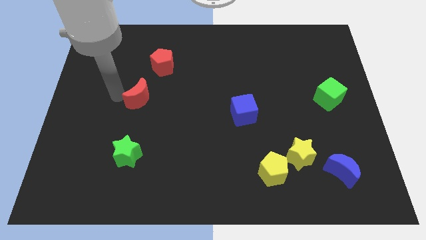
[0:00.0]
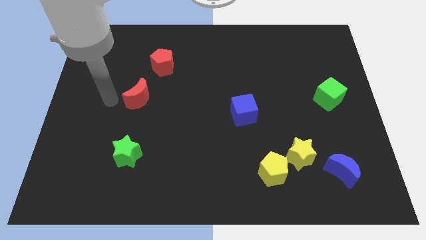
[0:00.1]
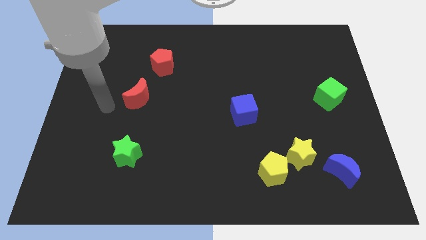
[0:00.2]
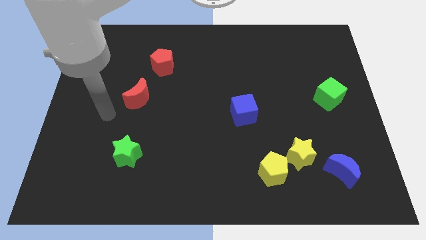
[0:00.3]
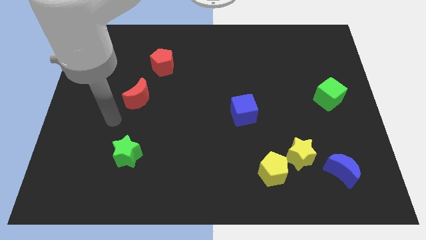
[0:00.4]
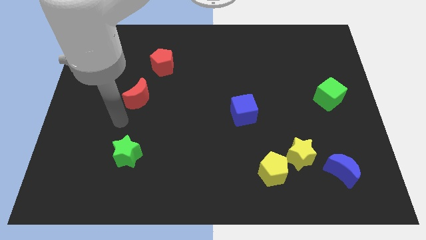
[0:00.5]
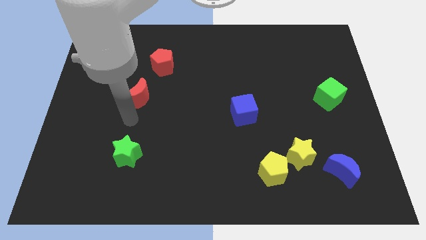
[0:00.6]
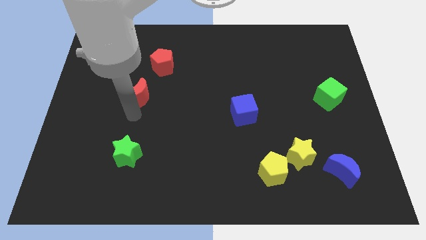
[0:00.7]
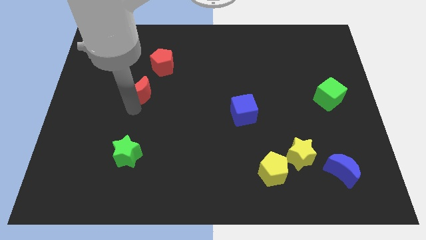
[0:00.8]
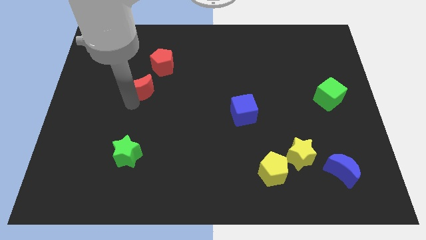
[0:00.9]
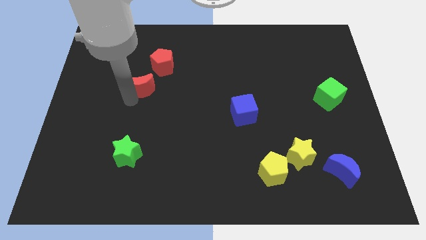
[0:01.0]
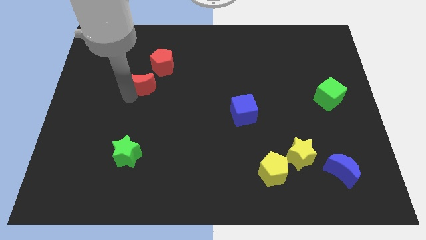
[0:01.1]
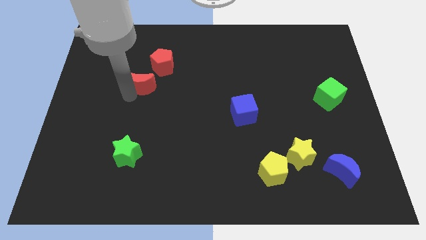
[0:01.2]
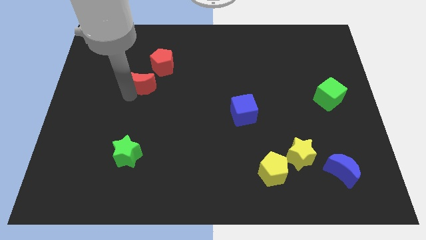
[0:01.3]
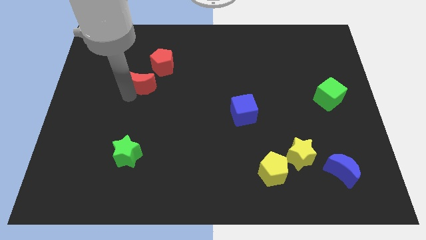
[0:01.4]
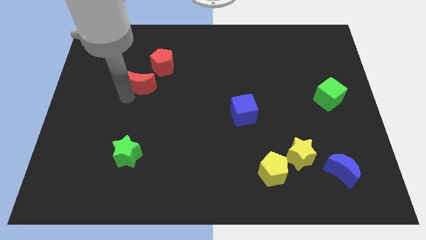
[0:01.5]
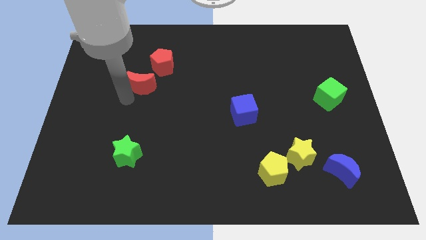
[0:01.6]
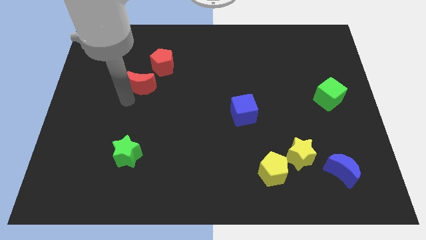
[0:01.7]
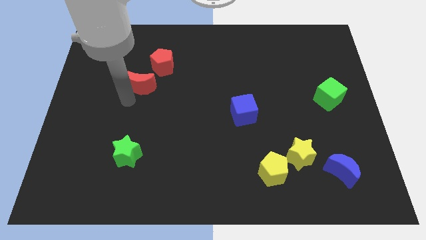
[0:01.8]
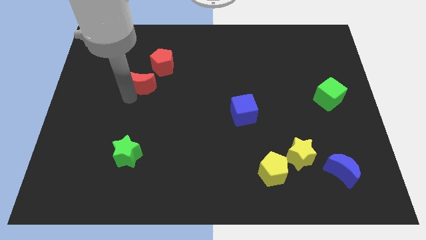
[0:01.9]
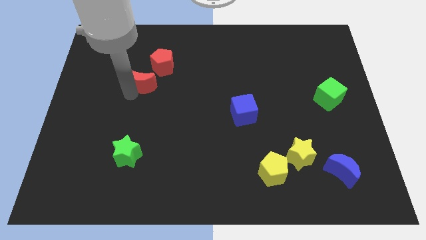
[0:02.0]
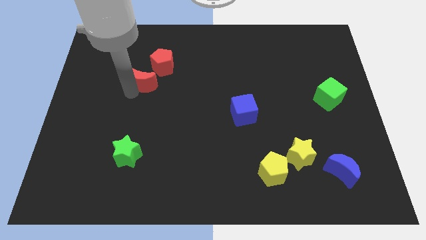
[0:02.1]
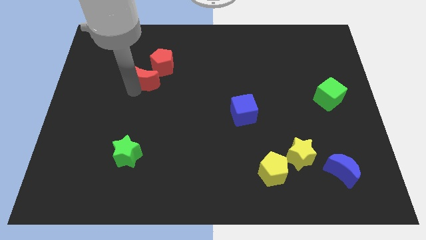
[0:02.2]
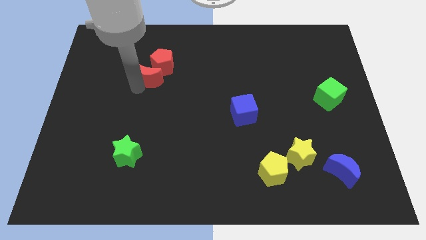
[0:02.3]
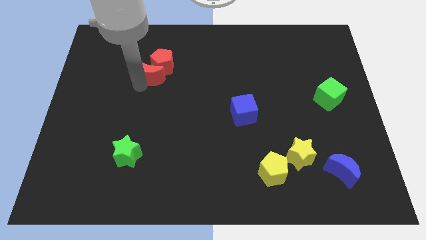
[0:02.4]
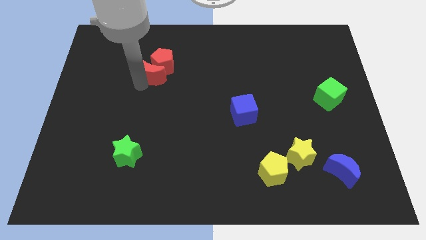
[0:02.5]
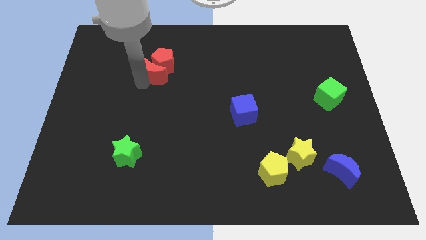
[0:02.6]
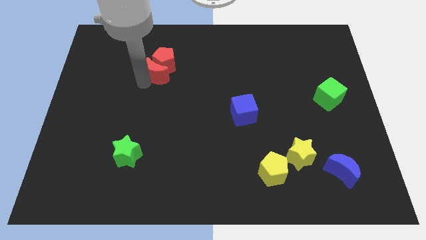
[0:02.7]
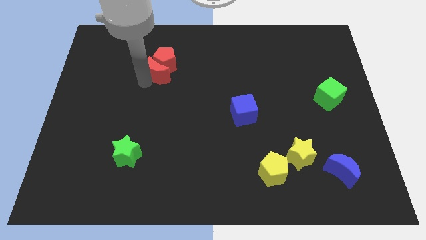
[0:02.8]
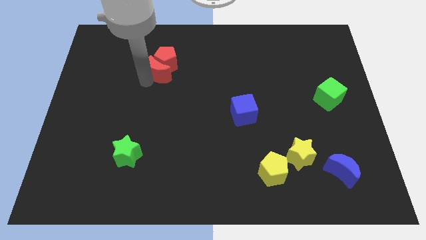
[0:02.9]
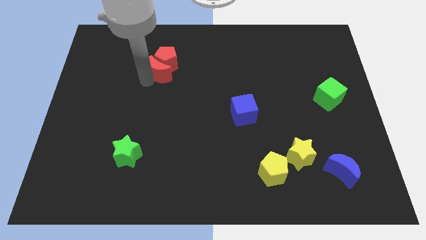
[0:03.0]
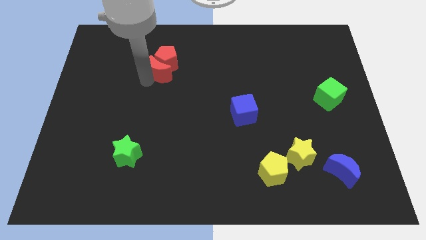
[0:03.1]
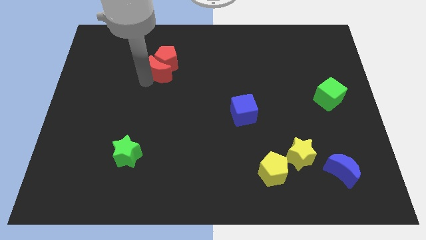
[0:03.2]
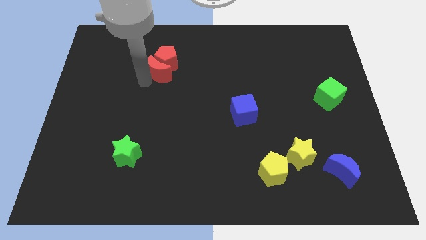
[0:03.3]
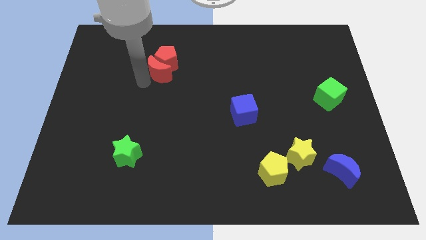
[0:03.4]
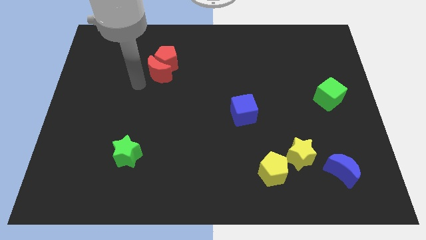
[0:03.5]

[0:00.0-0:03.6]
push the red crescent into red pentagon

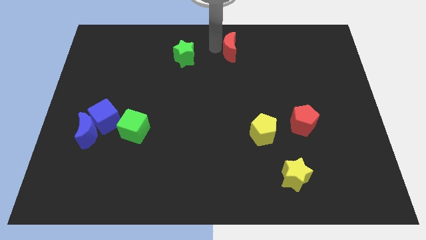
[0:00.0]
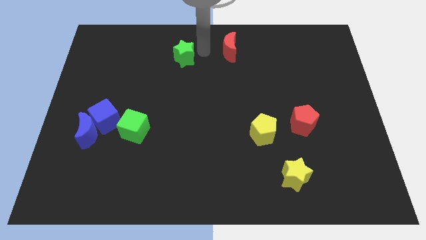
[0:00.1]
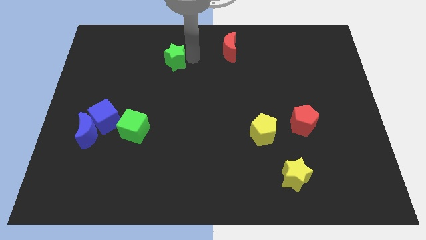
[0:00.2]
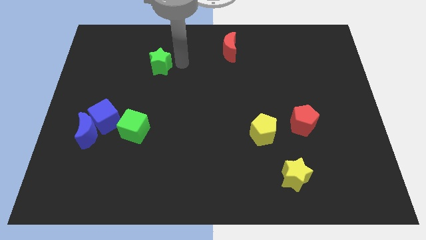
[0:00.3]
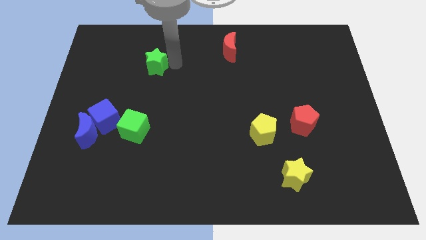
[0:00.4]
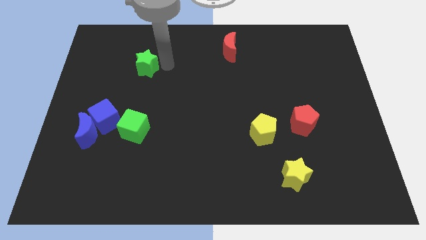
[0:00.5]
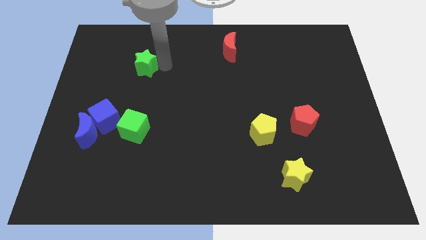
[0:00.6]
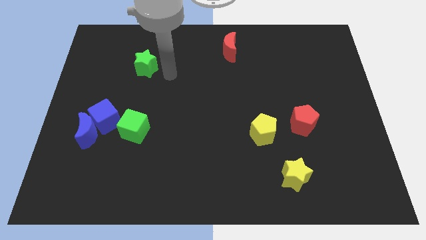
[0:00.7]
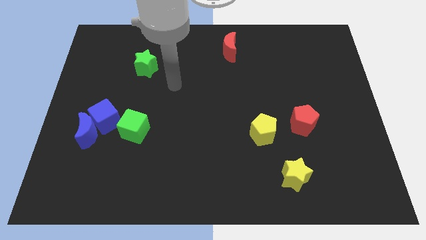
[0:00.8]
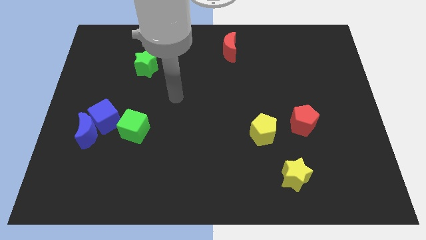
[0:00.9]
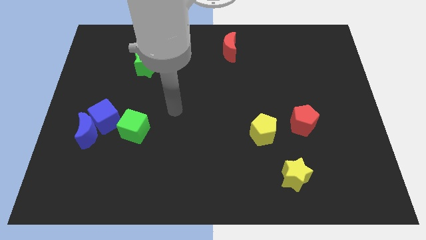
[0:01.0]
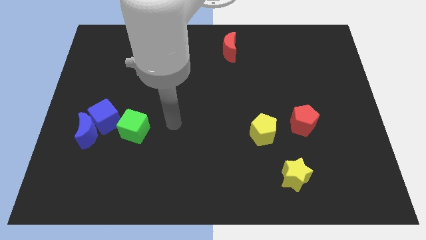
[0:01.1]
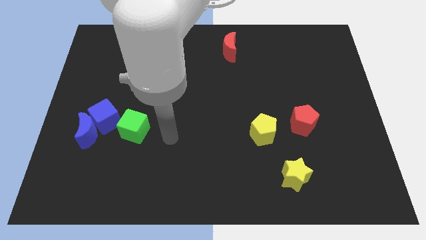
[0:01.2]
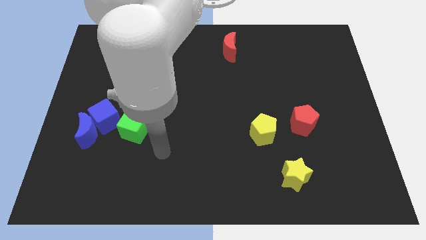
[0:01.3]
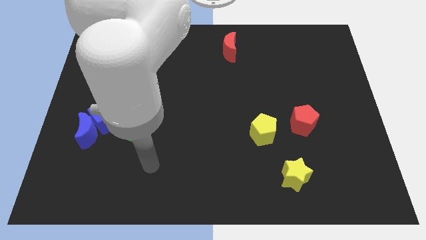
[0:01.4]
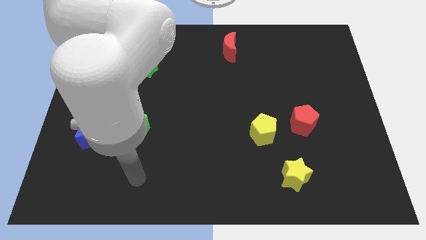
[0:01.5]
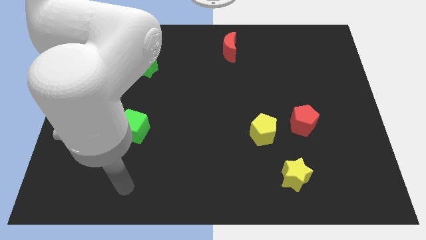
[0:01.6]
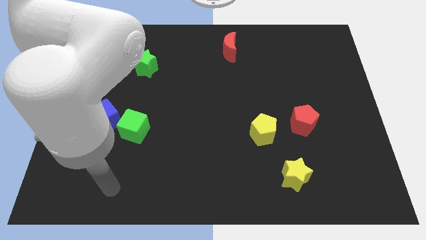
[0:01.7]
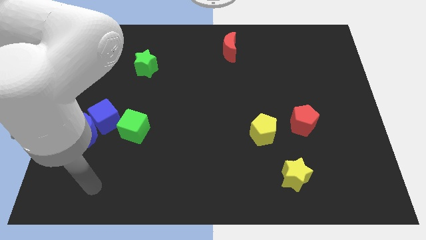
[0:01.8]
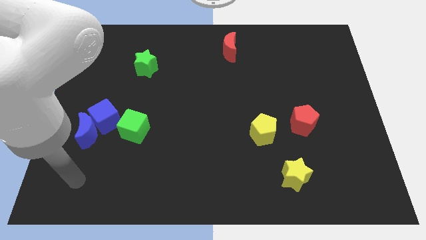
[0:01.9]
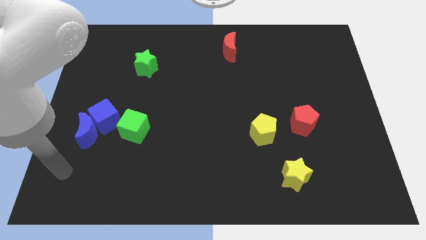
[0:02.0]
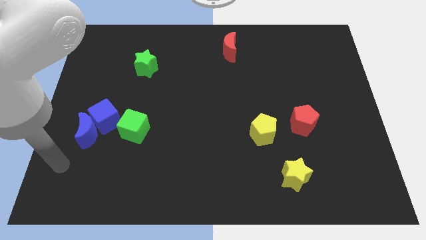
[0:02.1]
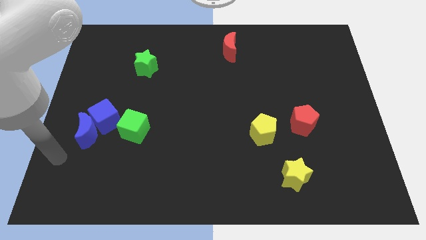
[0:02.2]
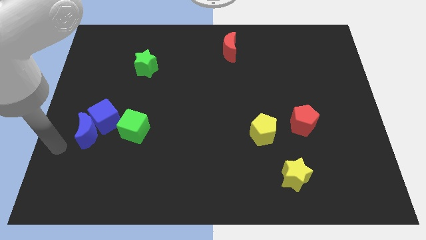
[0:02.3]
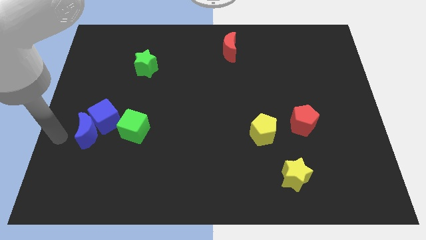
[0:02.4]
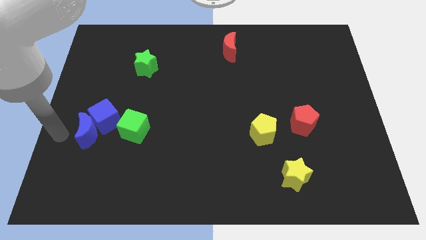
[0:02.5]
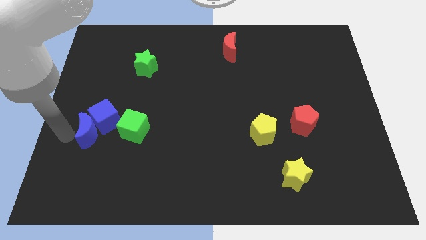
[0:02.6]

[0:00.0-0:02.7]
push the green star parallel to the top of the green cube

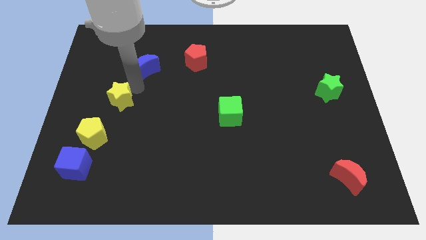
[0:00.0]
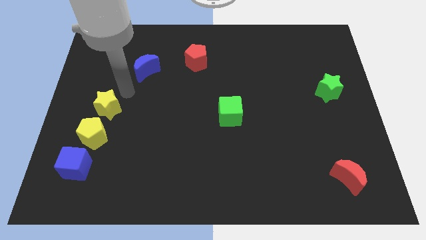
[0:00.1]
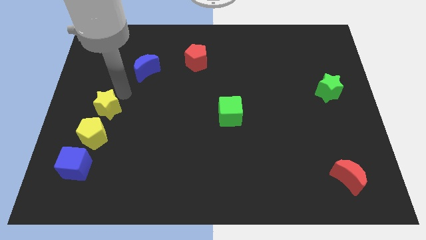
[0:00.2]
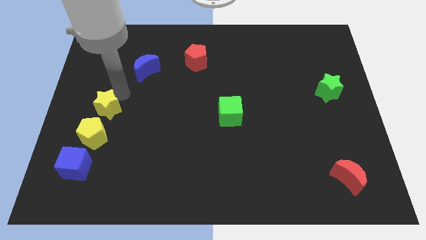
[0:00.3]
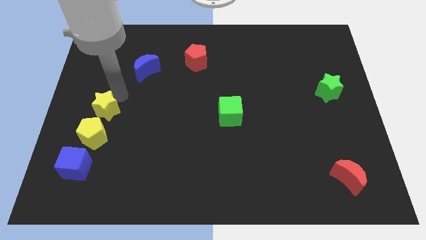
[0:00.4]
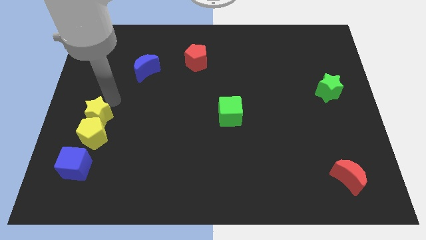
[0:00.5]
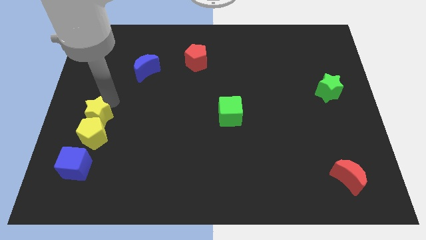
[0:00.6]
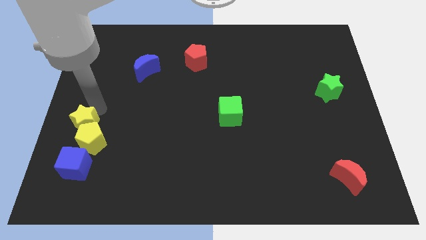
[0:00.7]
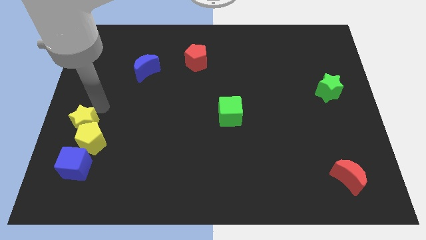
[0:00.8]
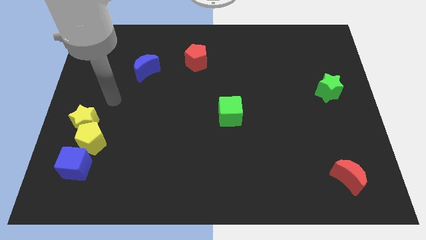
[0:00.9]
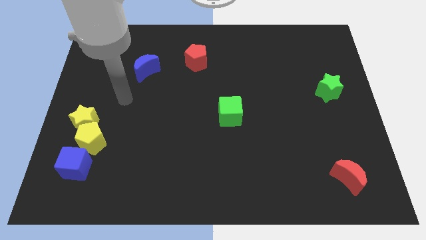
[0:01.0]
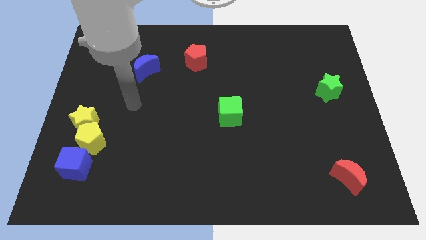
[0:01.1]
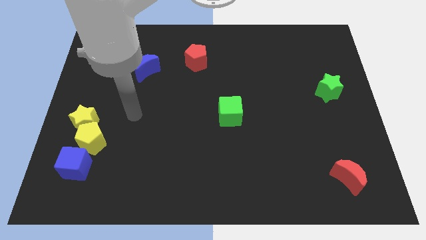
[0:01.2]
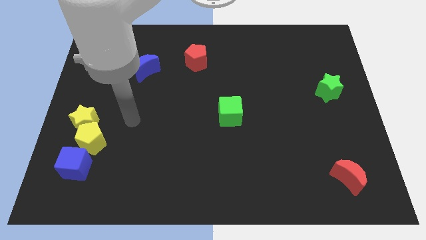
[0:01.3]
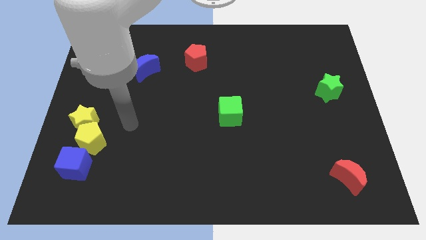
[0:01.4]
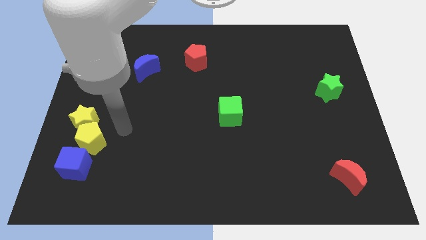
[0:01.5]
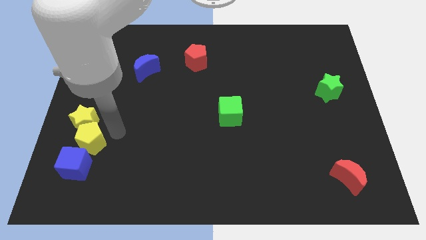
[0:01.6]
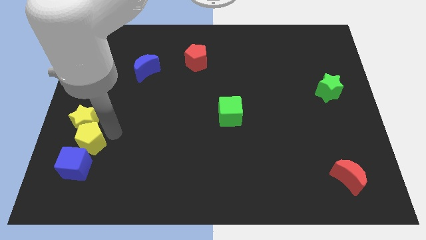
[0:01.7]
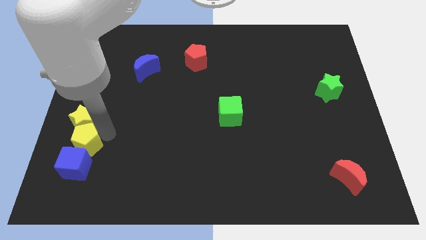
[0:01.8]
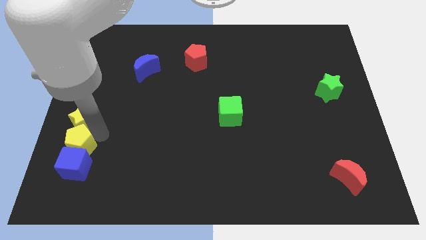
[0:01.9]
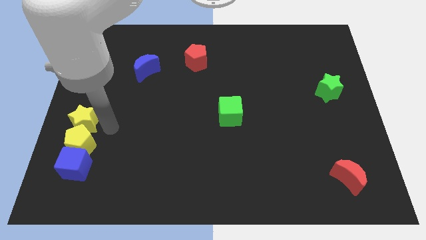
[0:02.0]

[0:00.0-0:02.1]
adjust the yellow blocks on top of blue cube

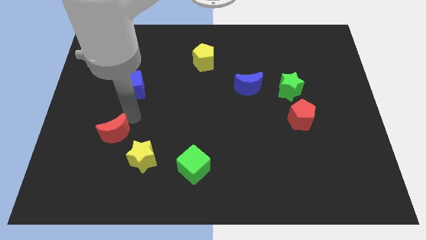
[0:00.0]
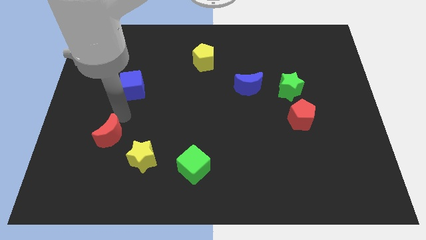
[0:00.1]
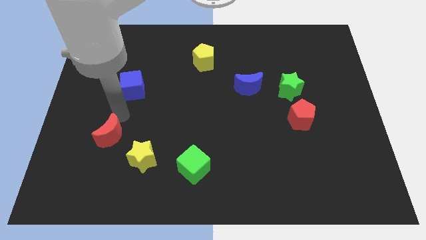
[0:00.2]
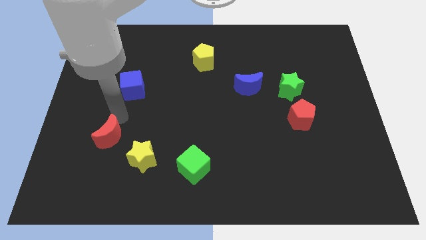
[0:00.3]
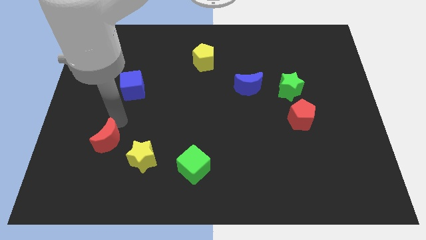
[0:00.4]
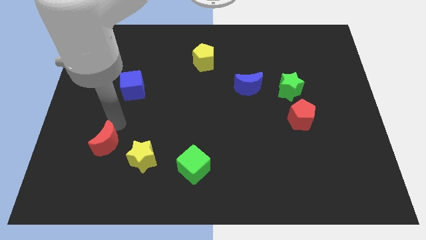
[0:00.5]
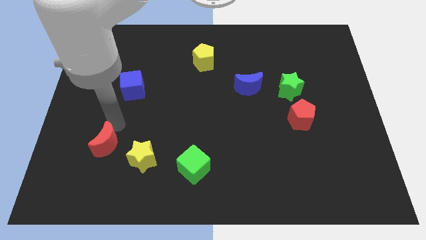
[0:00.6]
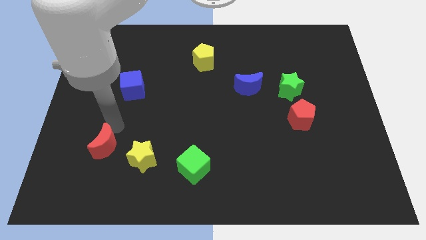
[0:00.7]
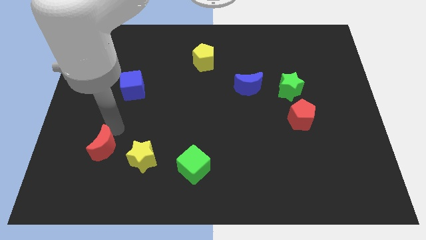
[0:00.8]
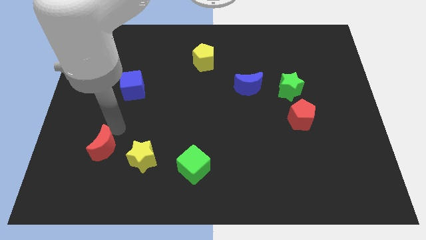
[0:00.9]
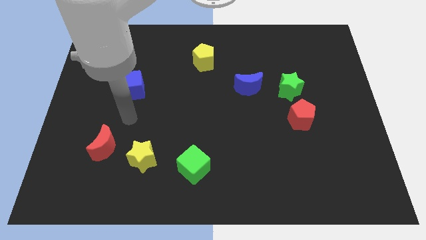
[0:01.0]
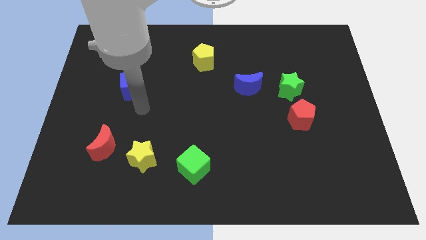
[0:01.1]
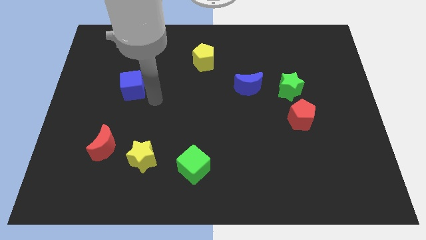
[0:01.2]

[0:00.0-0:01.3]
move the red crescent to the left of the yellow star
